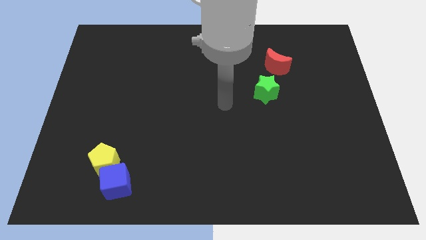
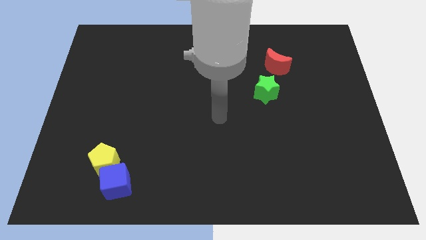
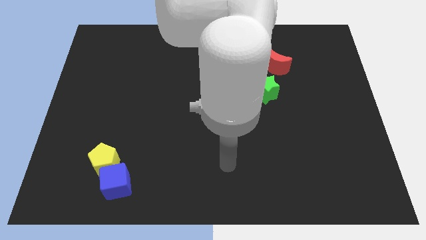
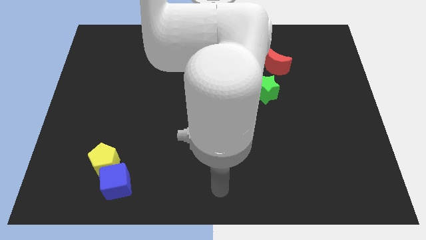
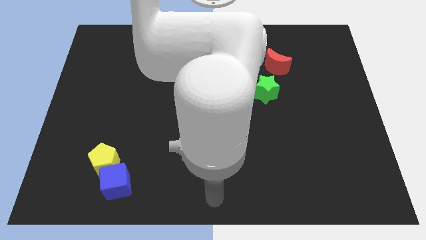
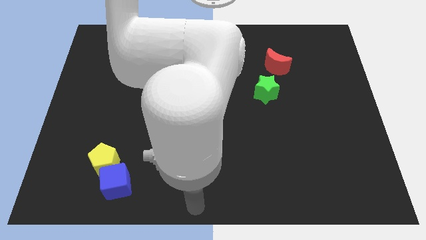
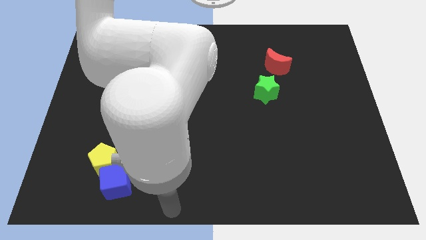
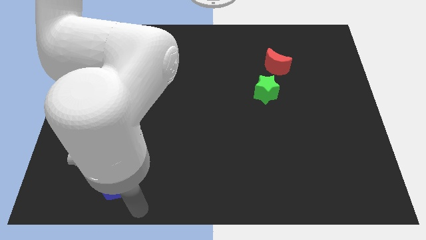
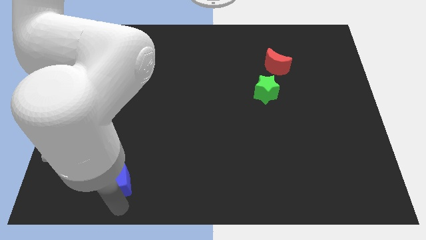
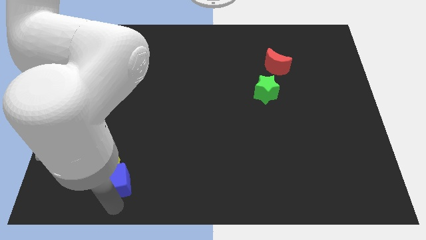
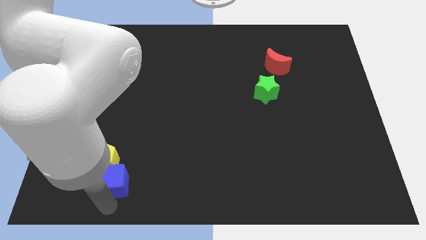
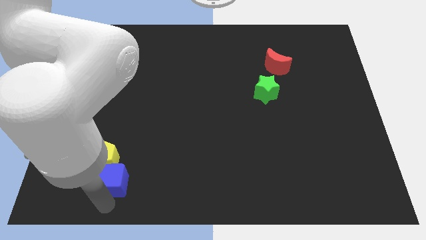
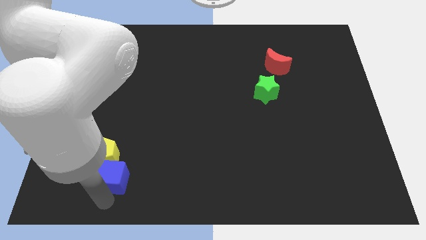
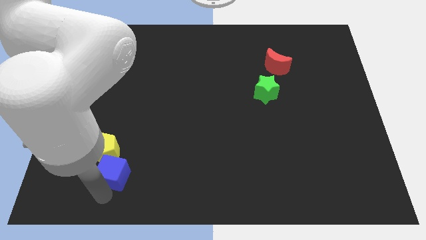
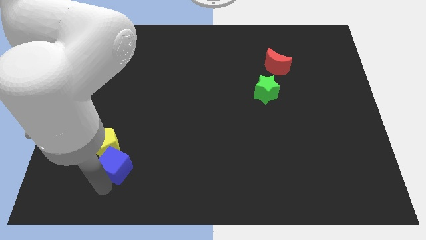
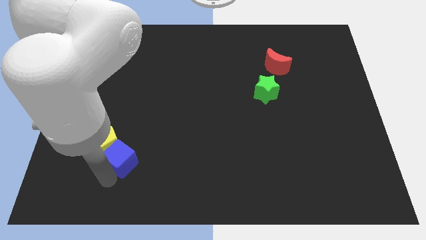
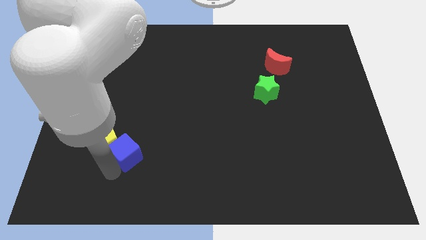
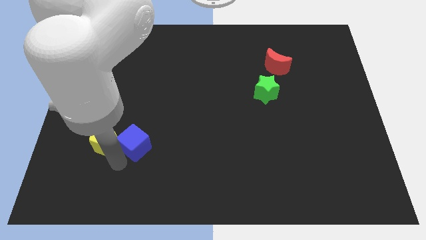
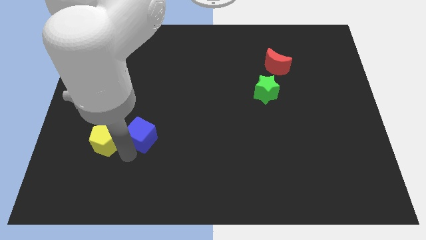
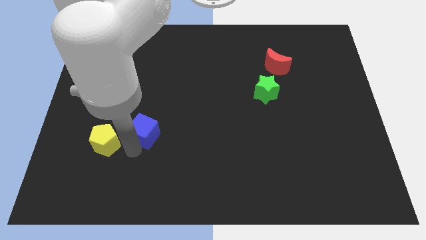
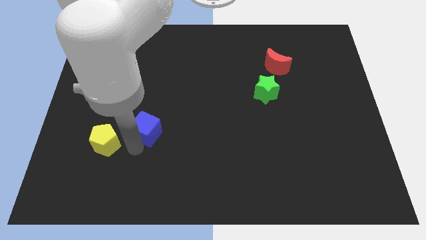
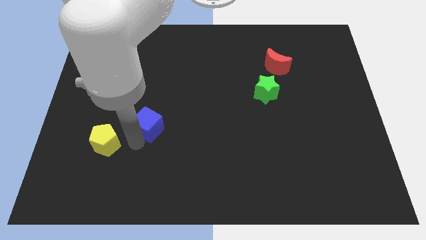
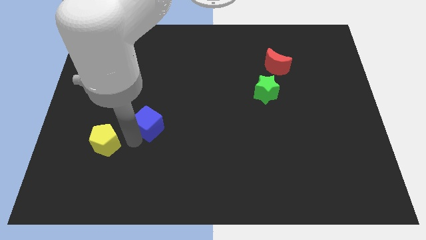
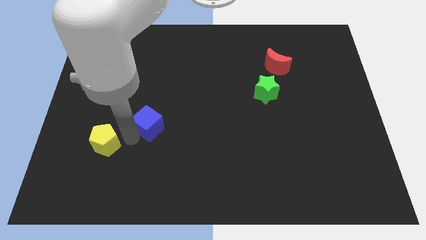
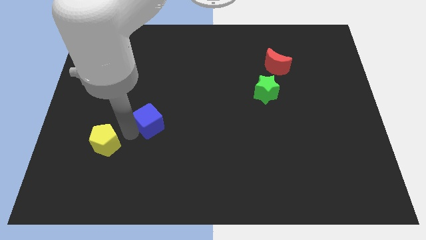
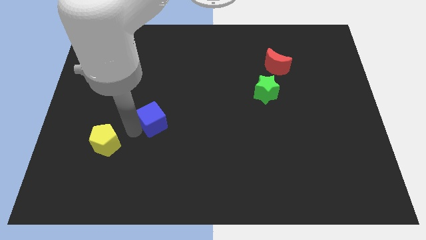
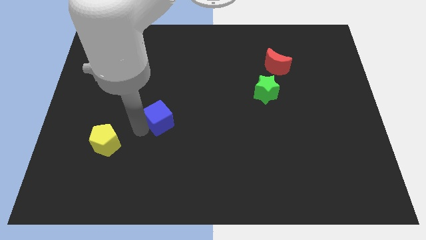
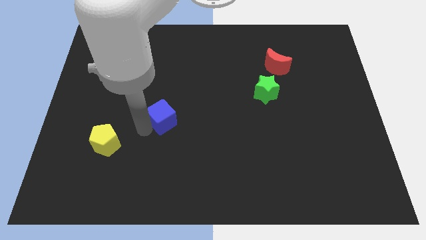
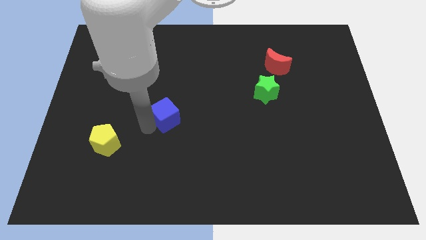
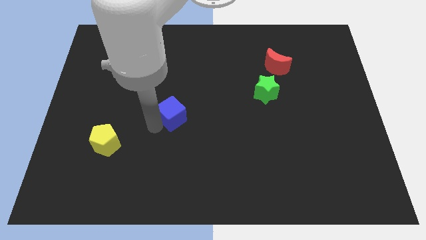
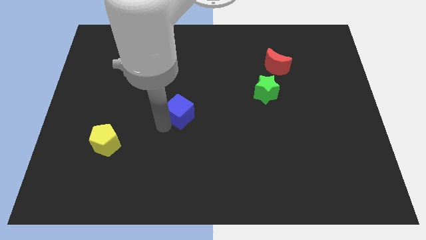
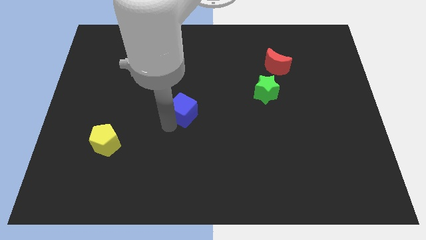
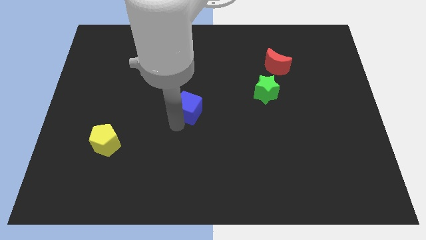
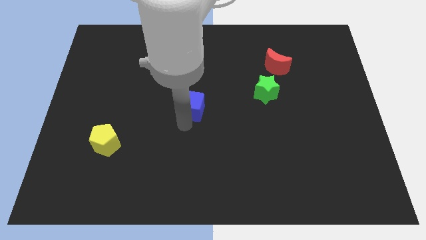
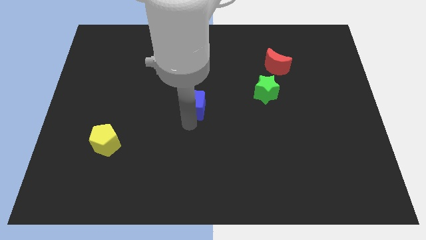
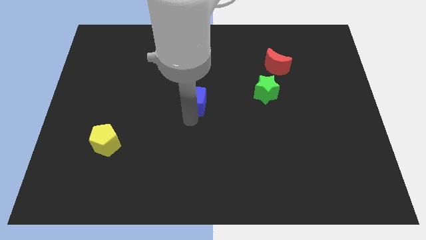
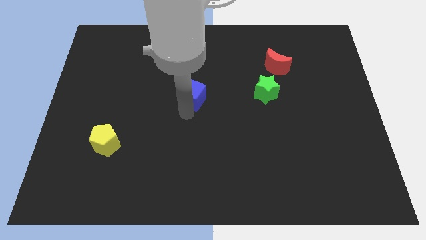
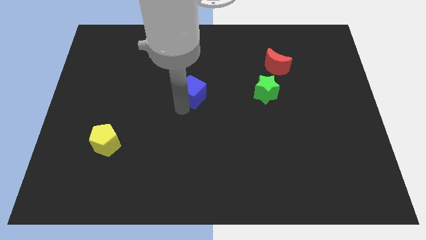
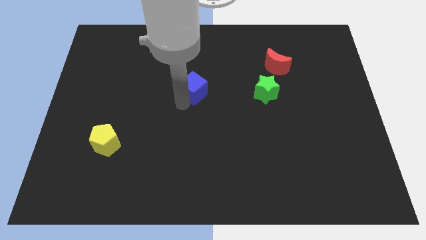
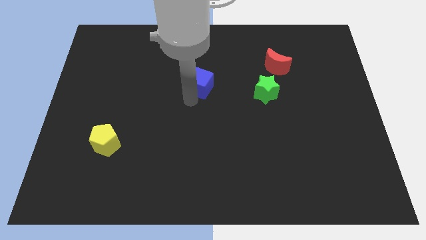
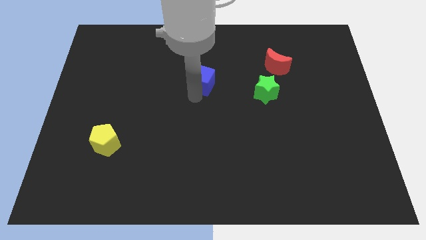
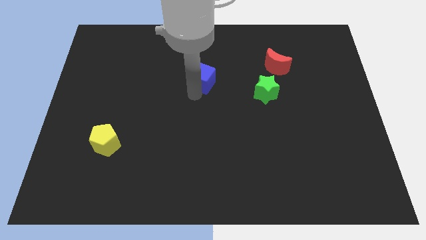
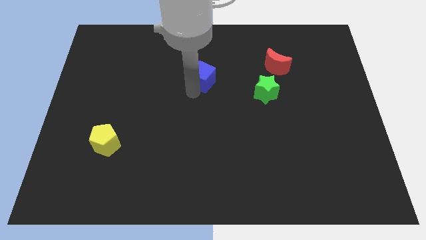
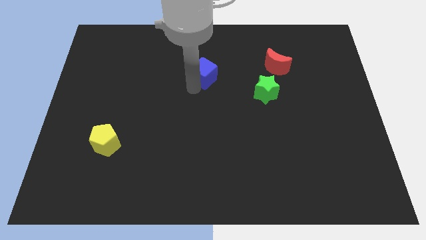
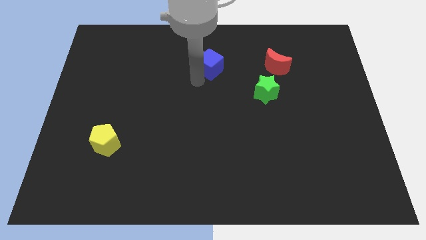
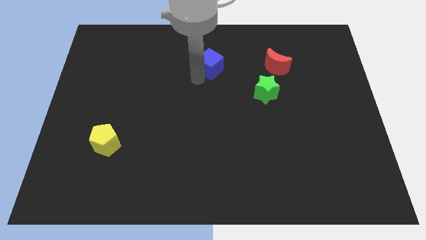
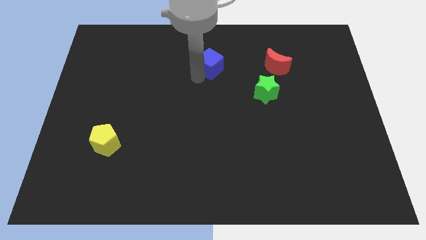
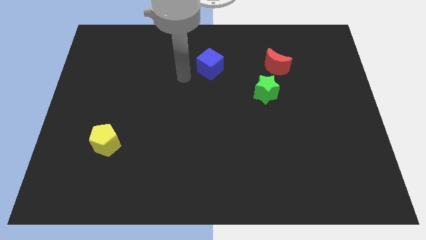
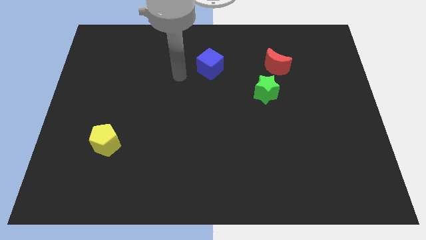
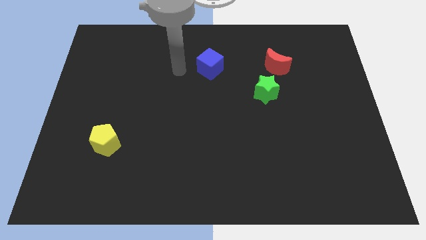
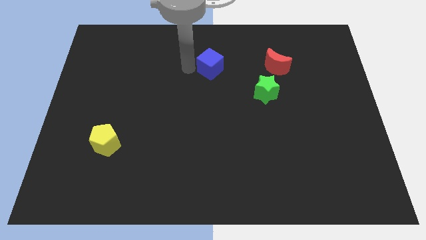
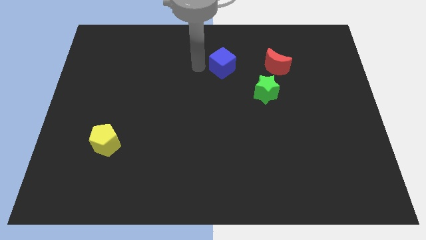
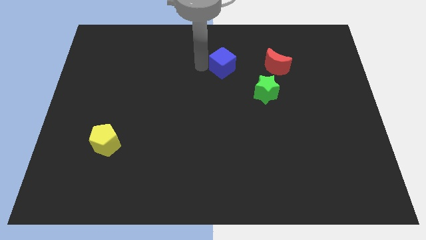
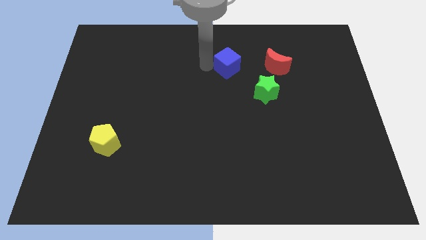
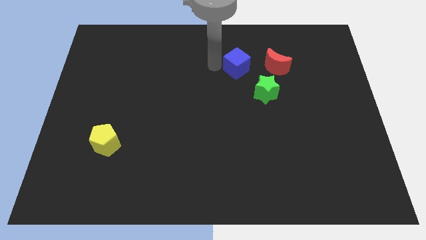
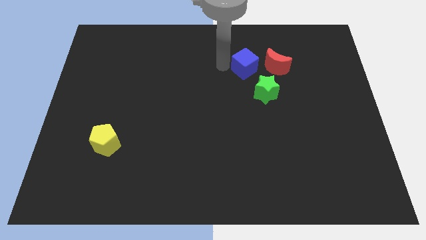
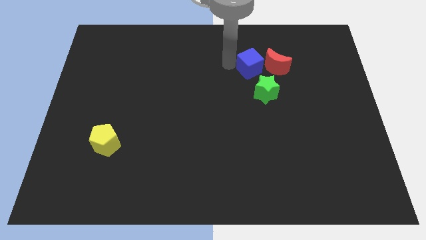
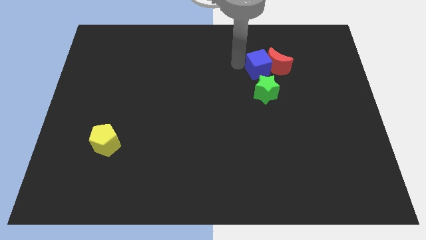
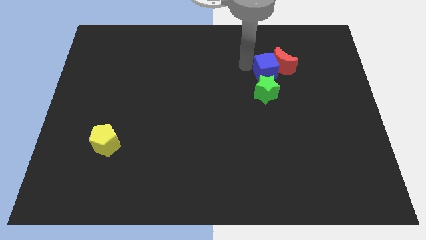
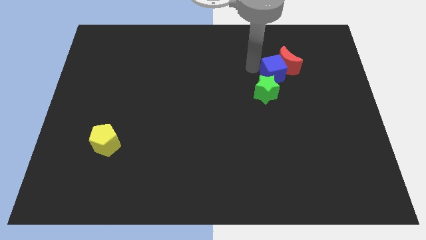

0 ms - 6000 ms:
slide the blue block next to the red moon

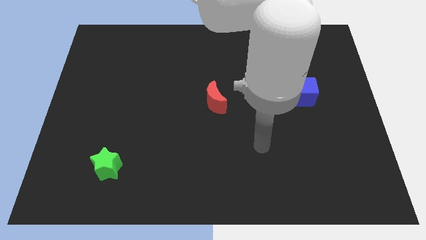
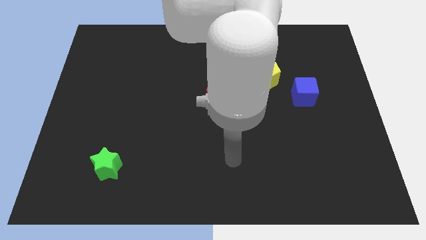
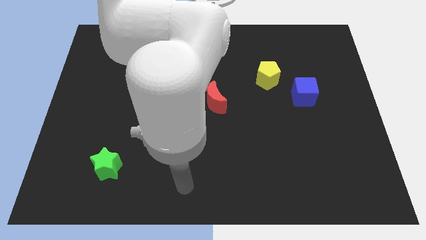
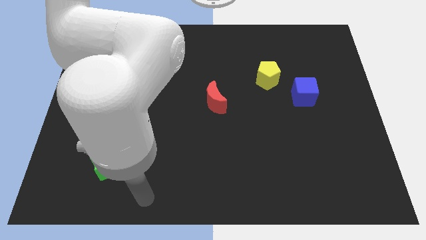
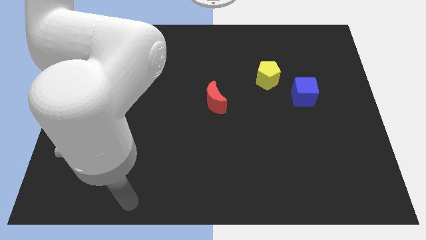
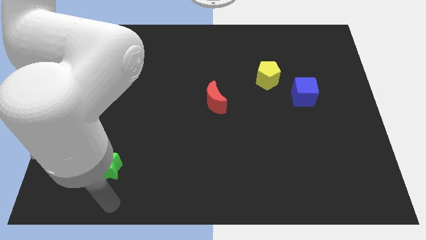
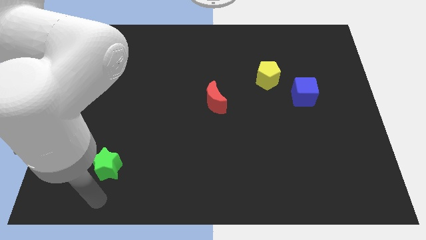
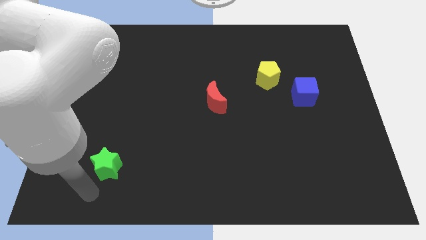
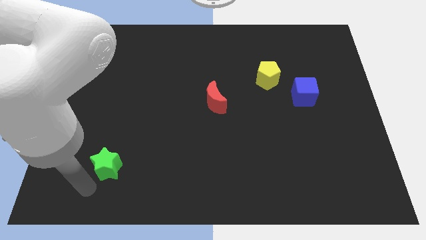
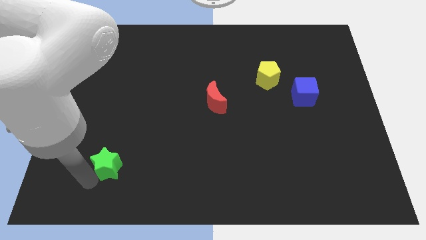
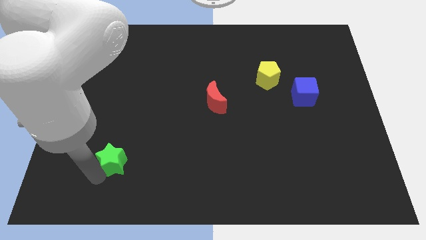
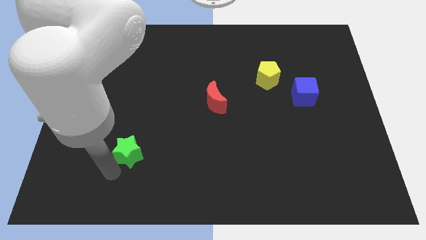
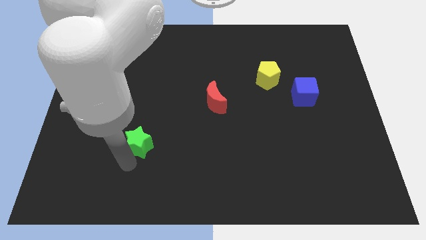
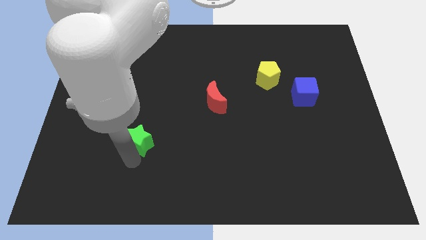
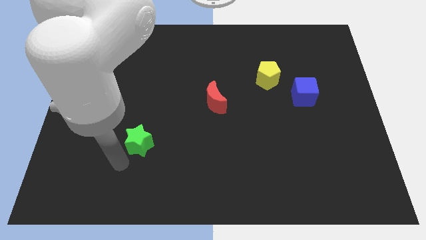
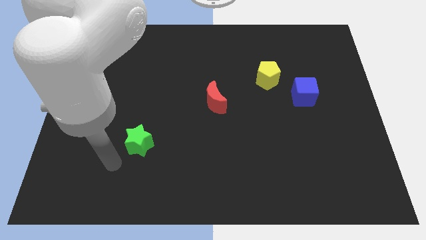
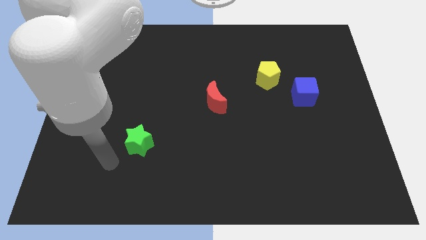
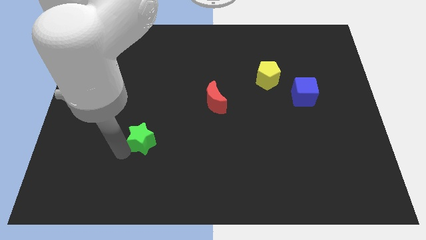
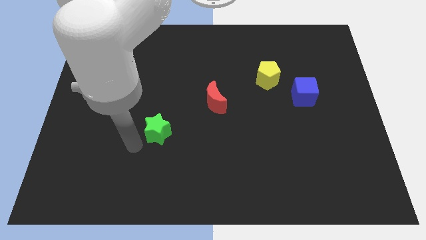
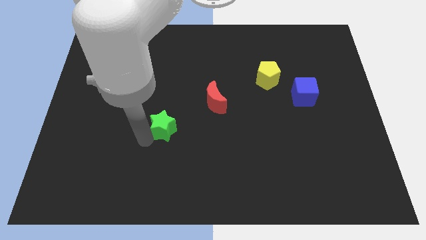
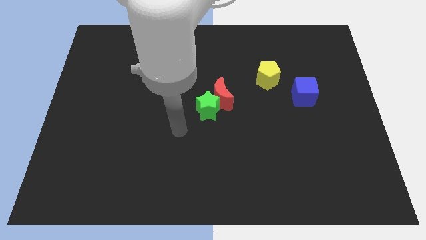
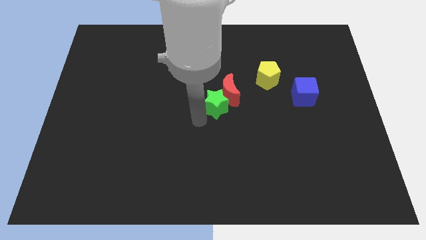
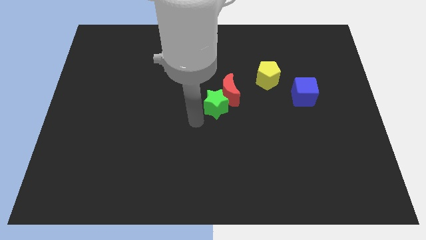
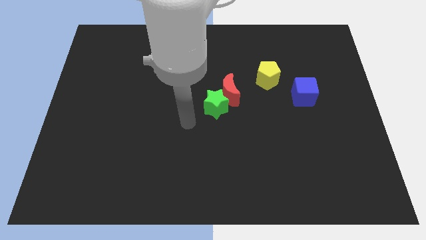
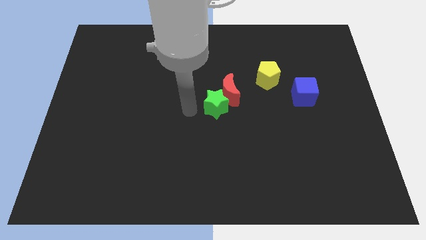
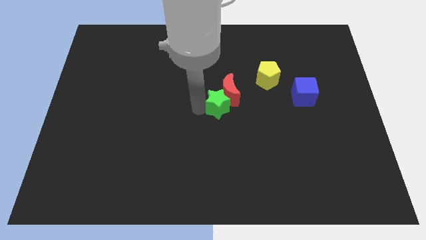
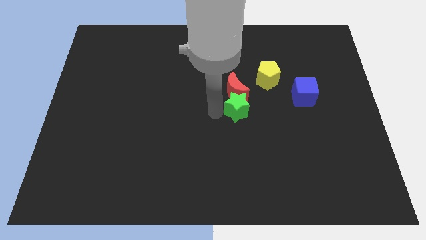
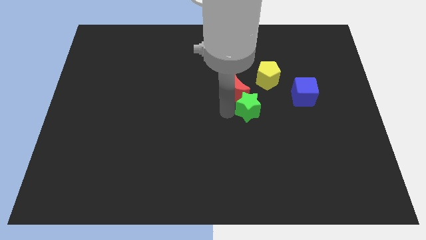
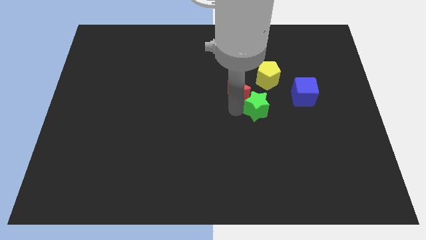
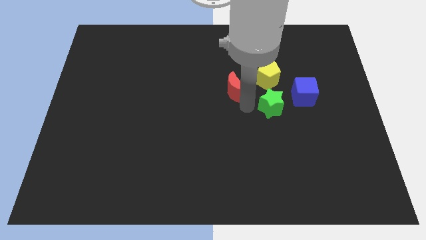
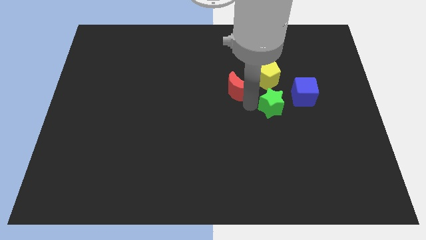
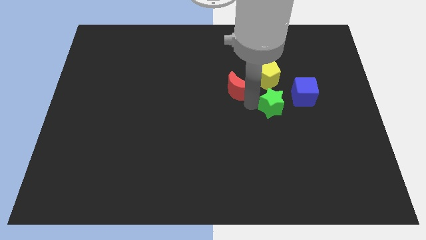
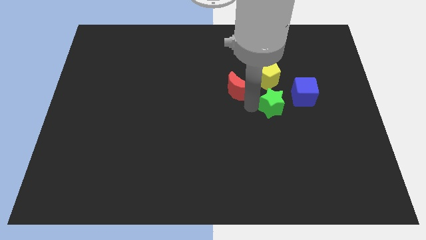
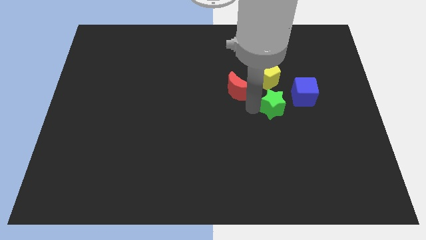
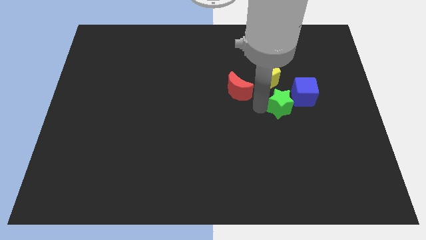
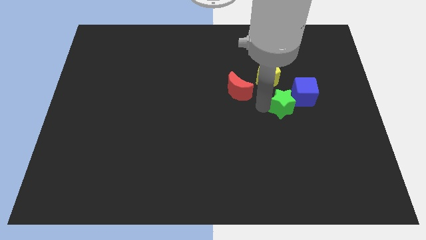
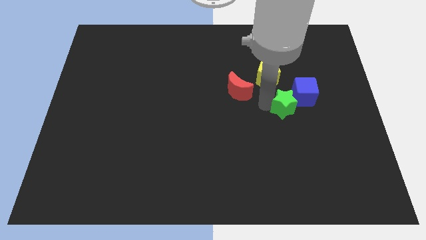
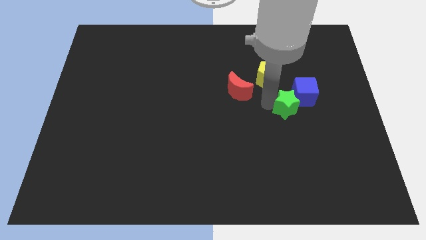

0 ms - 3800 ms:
push the green star next to the blue cube
